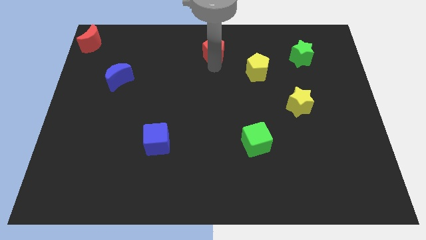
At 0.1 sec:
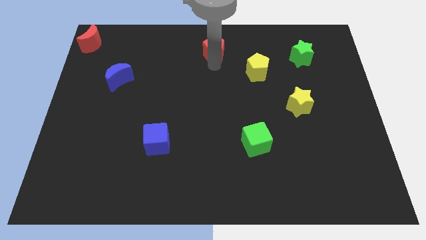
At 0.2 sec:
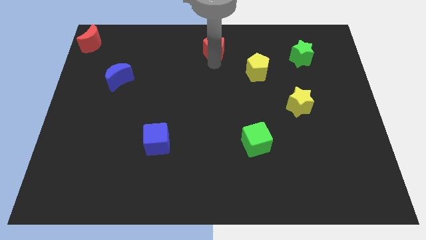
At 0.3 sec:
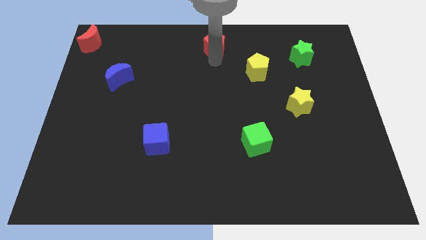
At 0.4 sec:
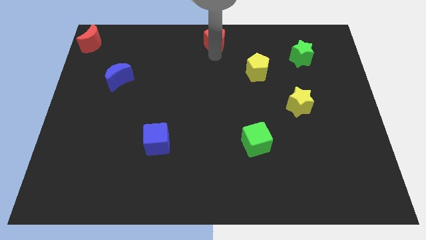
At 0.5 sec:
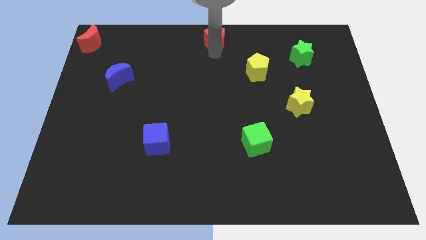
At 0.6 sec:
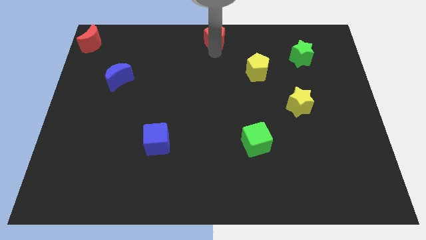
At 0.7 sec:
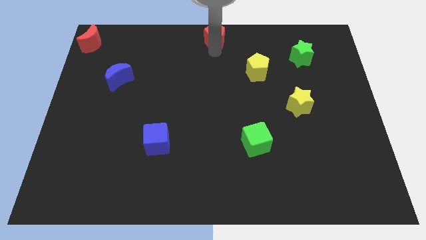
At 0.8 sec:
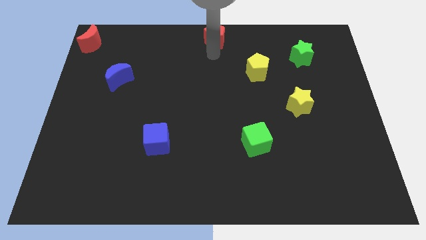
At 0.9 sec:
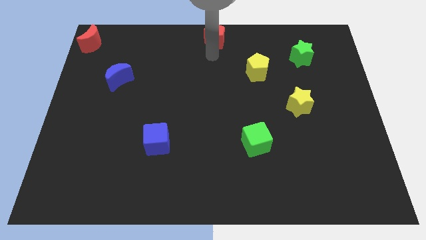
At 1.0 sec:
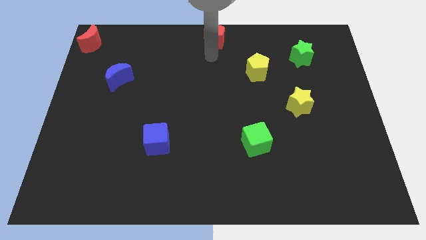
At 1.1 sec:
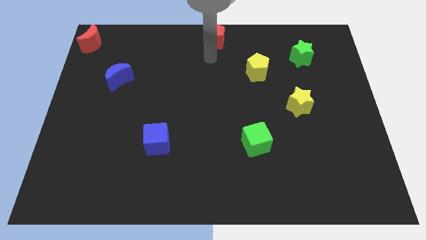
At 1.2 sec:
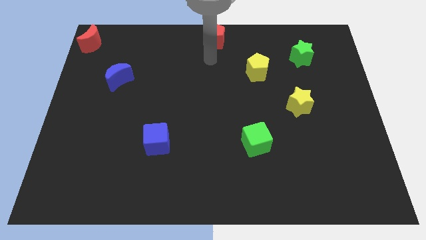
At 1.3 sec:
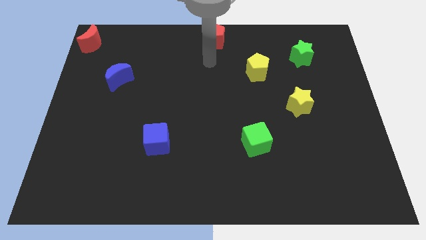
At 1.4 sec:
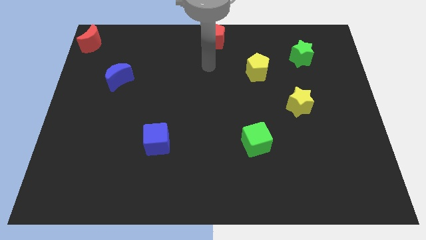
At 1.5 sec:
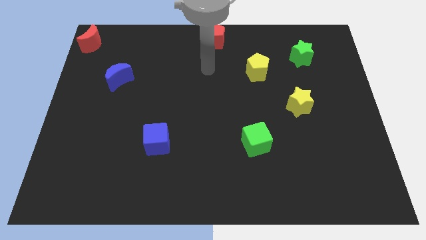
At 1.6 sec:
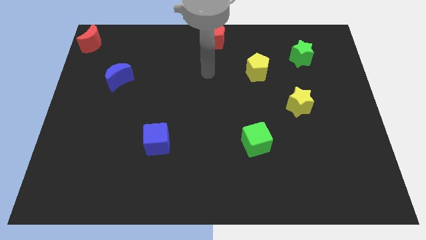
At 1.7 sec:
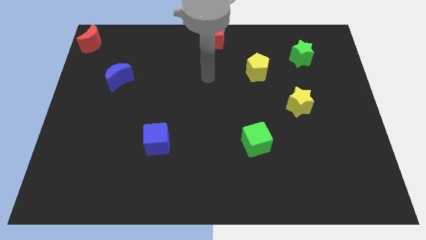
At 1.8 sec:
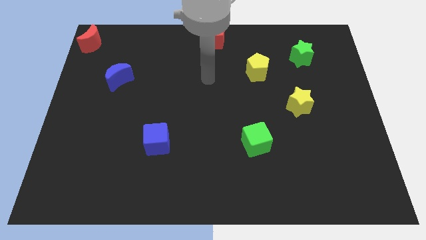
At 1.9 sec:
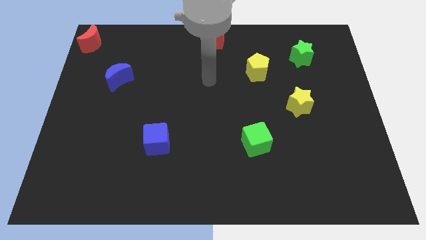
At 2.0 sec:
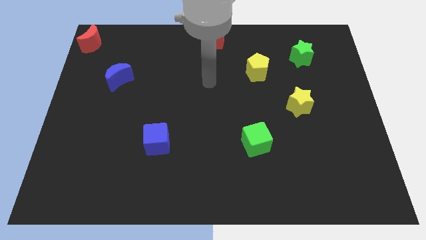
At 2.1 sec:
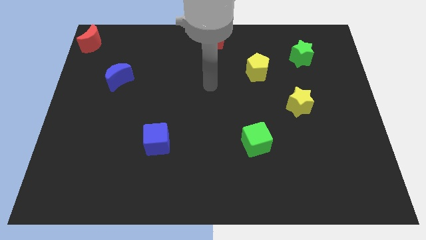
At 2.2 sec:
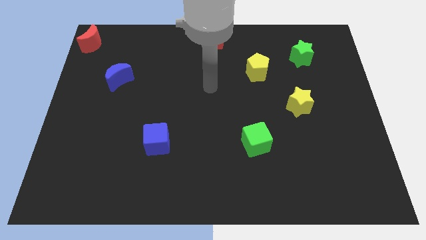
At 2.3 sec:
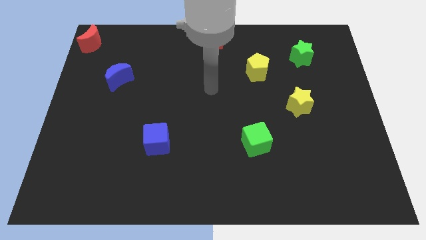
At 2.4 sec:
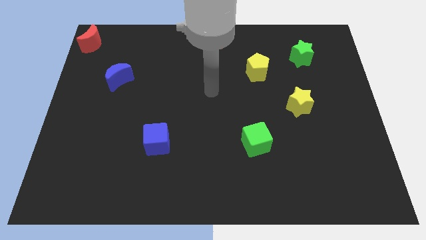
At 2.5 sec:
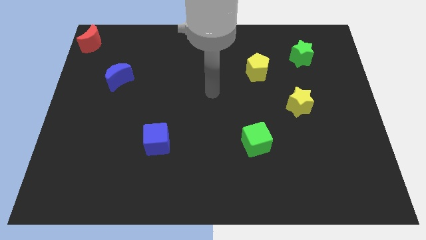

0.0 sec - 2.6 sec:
push the red pentagon to the top middle side of the board

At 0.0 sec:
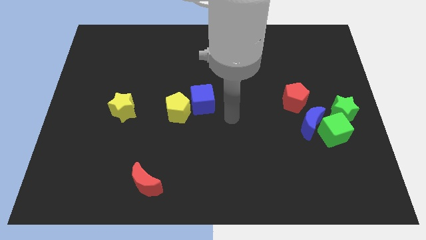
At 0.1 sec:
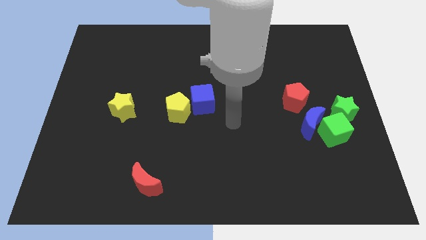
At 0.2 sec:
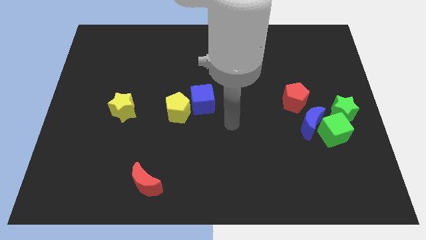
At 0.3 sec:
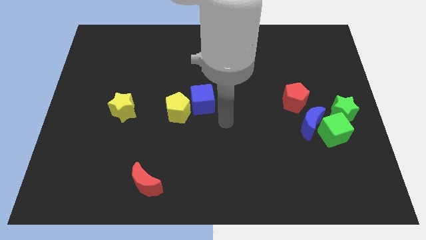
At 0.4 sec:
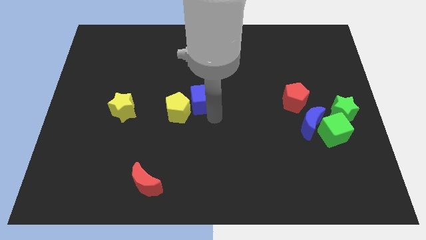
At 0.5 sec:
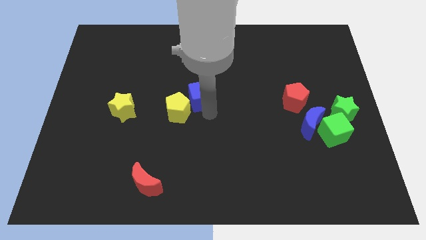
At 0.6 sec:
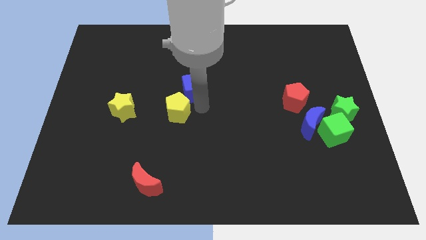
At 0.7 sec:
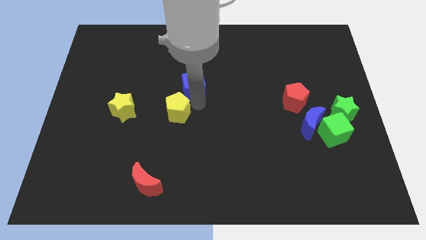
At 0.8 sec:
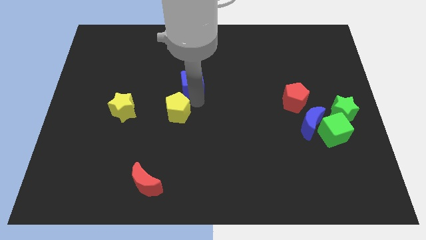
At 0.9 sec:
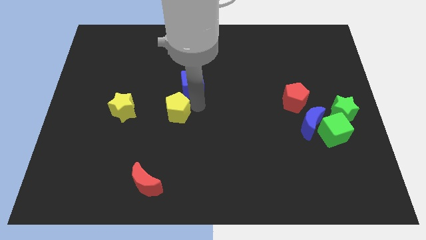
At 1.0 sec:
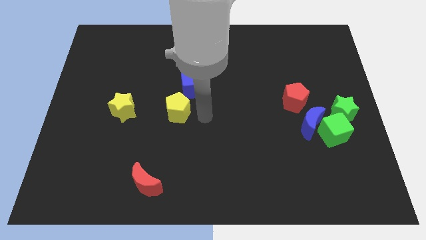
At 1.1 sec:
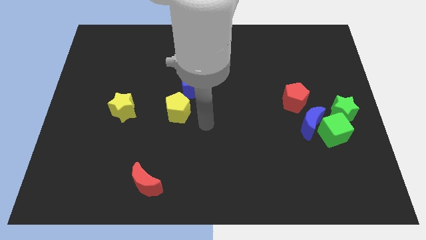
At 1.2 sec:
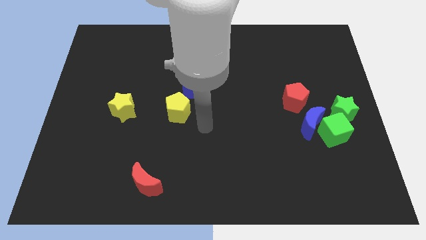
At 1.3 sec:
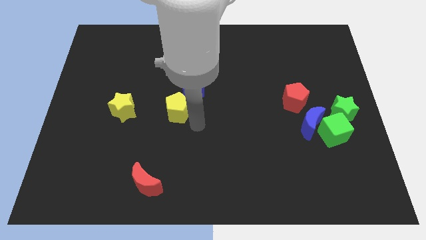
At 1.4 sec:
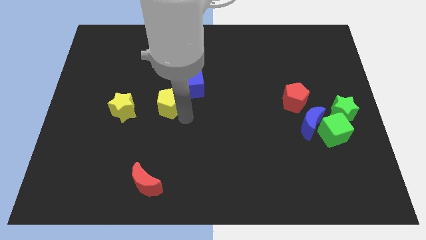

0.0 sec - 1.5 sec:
slightly push the blue cube upwards

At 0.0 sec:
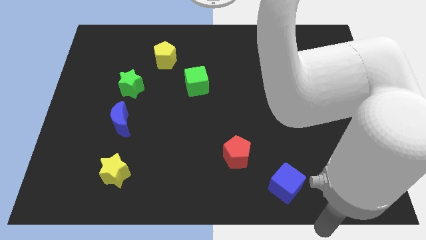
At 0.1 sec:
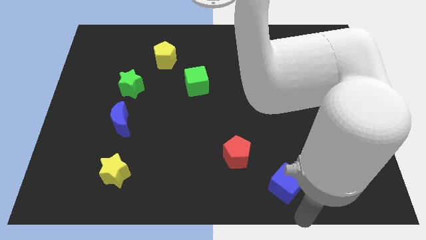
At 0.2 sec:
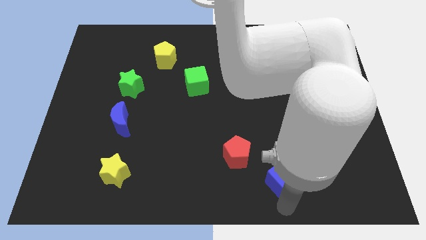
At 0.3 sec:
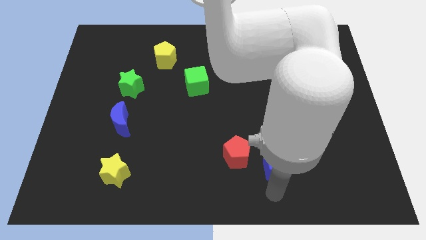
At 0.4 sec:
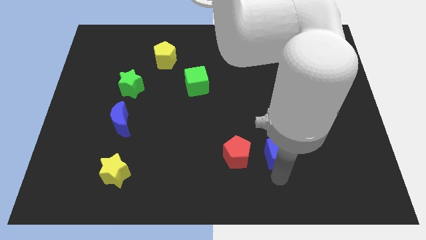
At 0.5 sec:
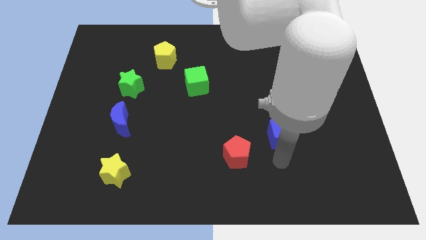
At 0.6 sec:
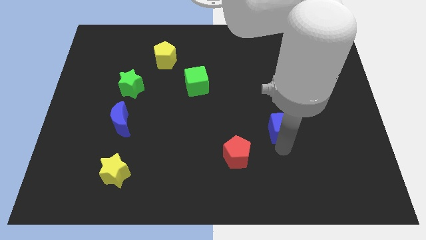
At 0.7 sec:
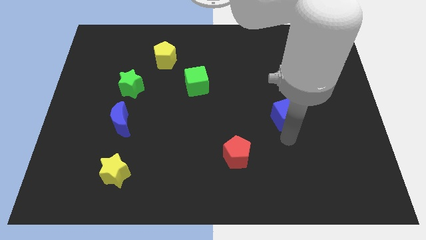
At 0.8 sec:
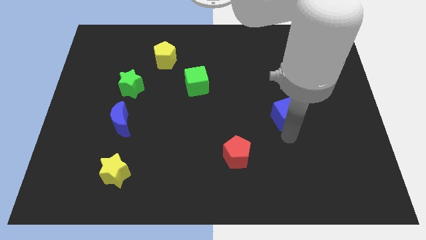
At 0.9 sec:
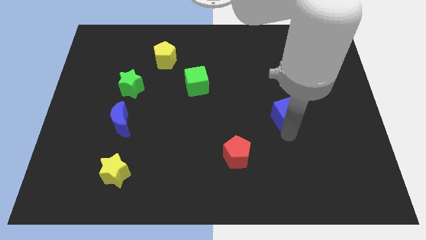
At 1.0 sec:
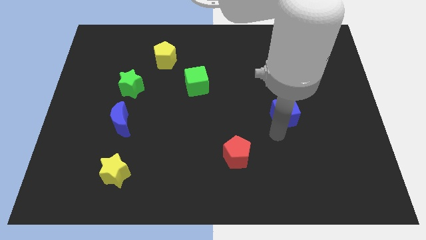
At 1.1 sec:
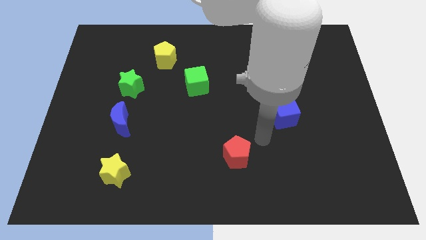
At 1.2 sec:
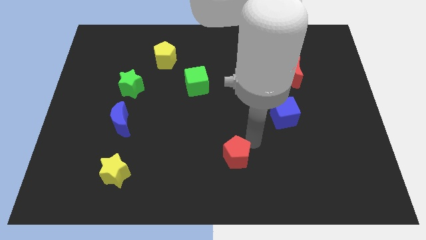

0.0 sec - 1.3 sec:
move blue cube near red moon

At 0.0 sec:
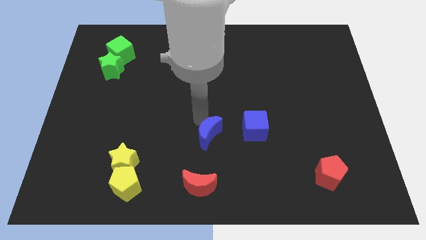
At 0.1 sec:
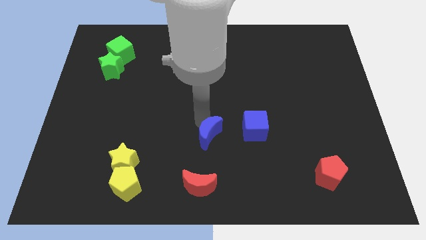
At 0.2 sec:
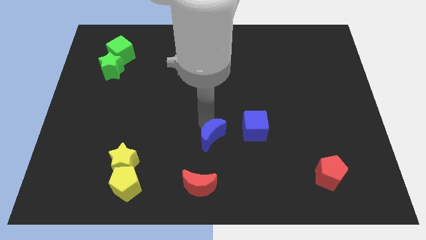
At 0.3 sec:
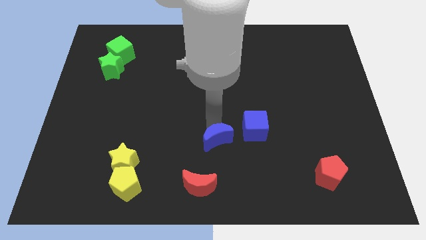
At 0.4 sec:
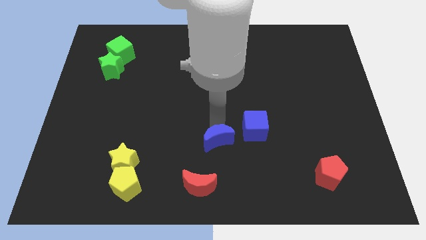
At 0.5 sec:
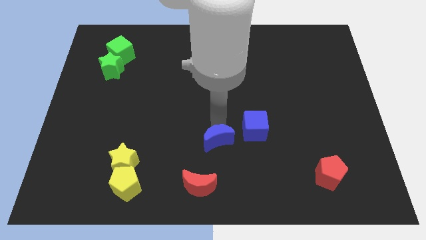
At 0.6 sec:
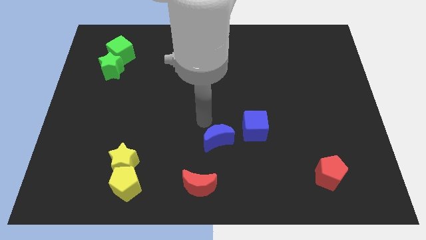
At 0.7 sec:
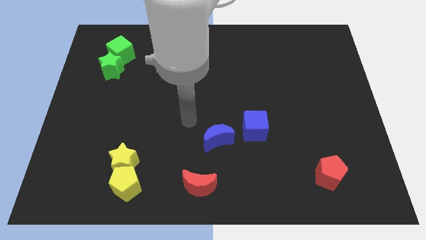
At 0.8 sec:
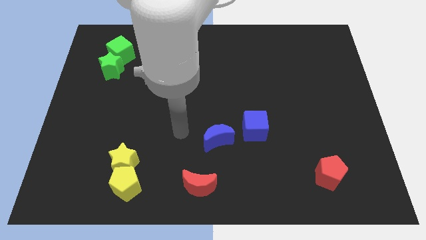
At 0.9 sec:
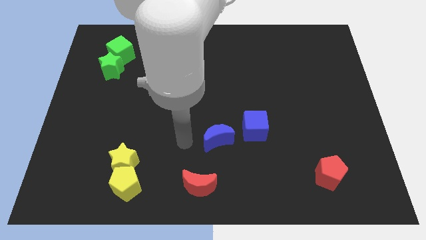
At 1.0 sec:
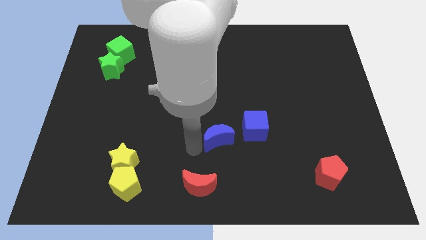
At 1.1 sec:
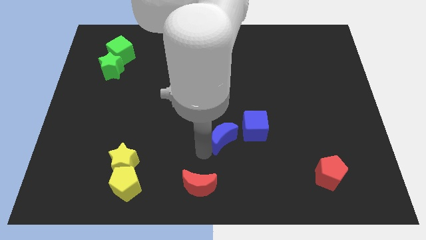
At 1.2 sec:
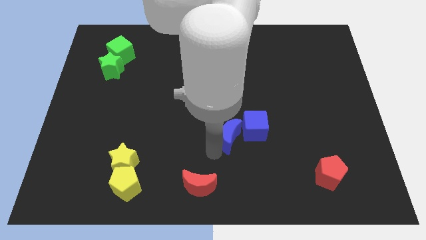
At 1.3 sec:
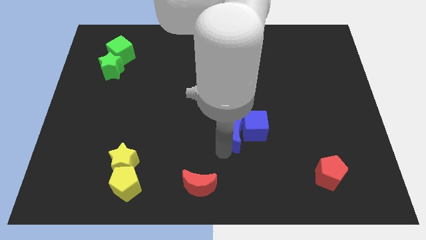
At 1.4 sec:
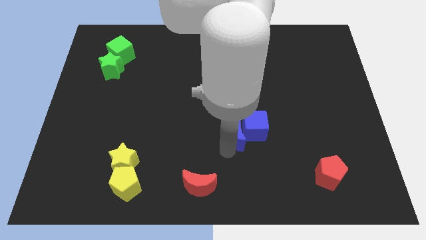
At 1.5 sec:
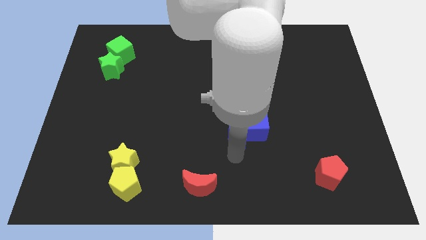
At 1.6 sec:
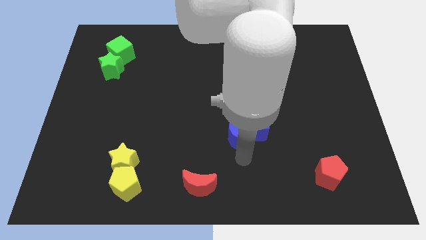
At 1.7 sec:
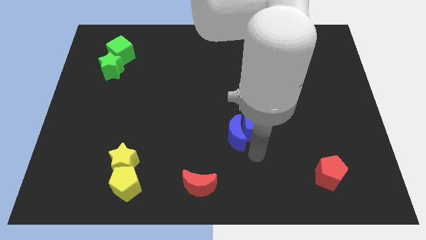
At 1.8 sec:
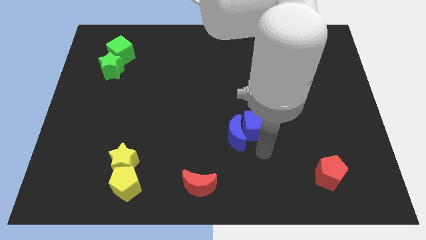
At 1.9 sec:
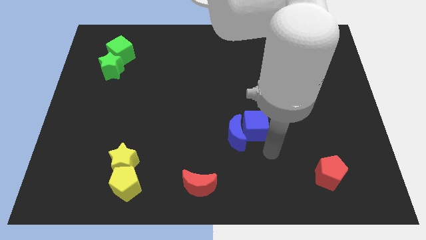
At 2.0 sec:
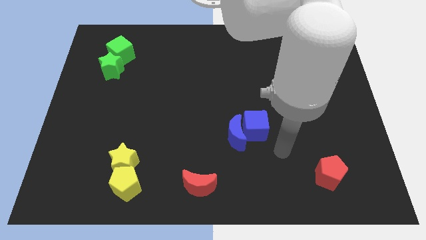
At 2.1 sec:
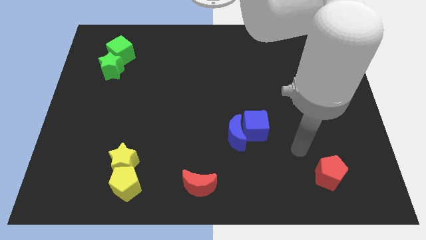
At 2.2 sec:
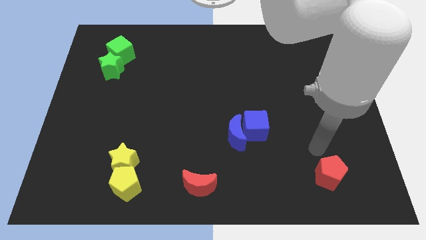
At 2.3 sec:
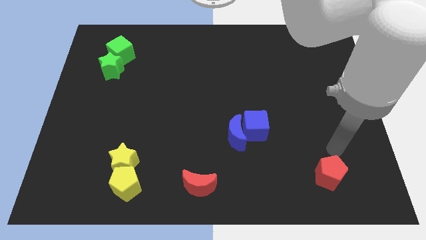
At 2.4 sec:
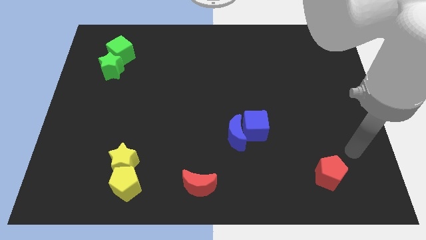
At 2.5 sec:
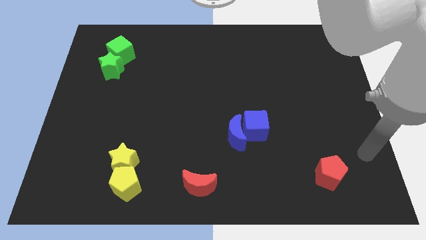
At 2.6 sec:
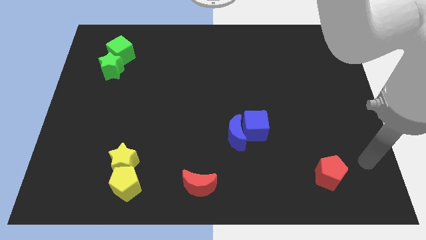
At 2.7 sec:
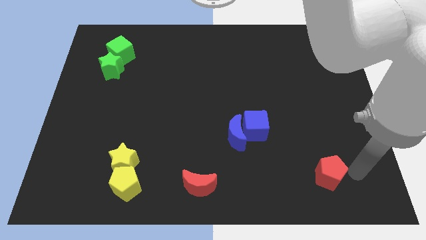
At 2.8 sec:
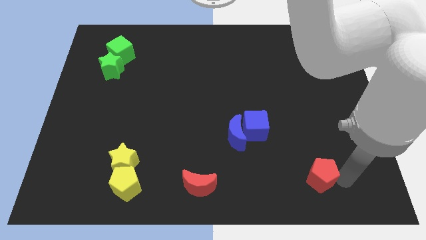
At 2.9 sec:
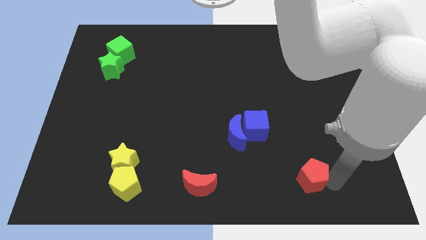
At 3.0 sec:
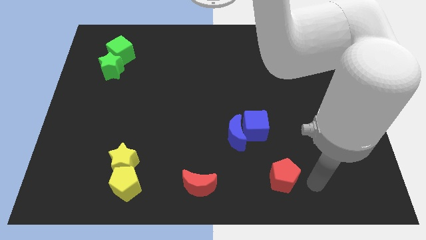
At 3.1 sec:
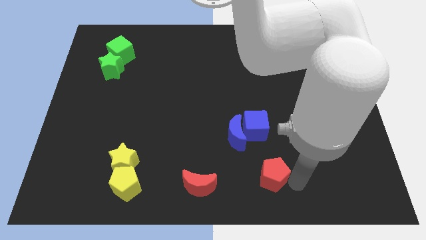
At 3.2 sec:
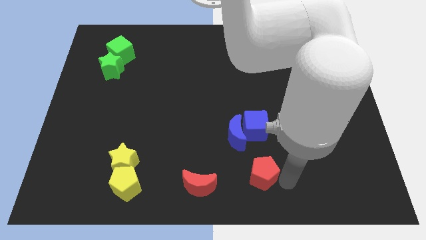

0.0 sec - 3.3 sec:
place the red pentagon down to the blue cube

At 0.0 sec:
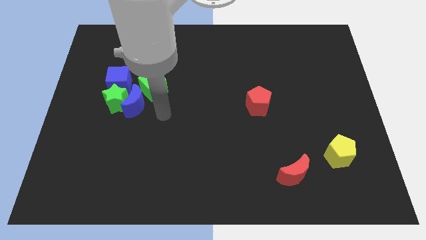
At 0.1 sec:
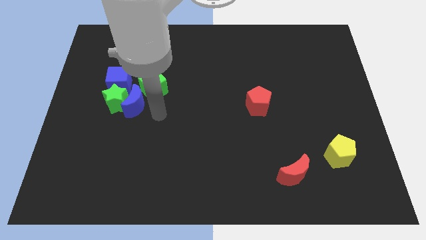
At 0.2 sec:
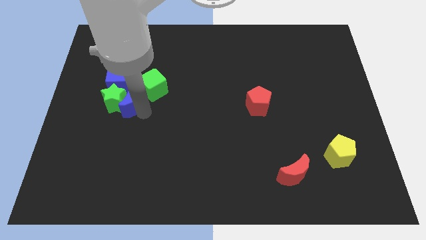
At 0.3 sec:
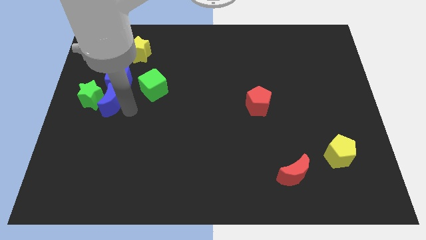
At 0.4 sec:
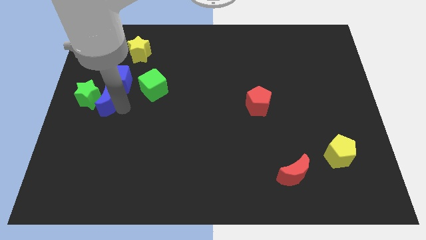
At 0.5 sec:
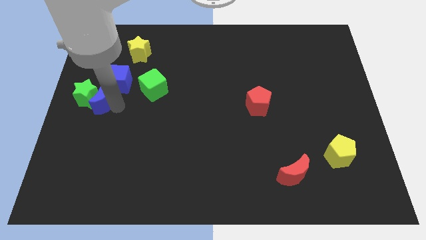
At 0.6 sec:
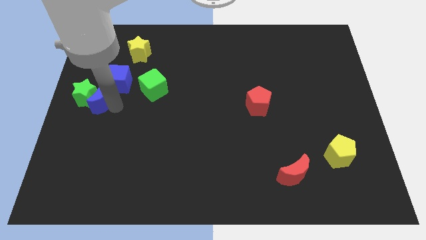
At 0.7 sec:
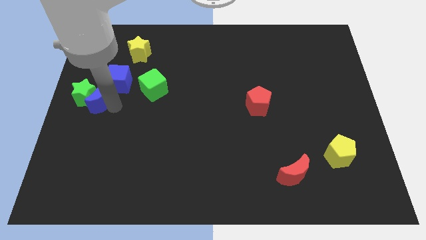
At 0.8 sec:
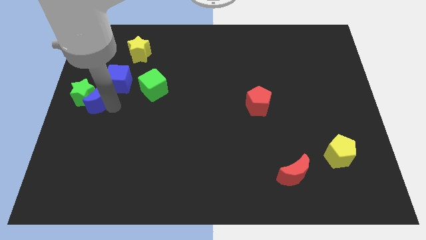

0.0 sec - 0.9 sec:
push blue moon to the left
